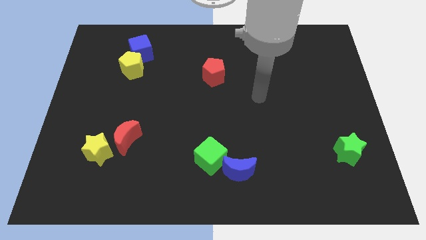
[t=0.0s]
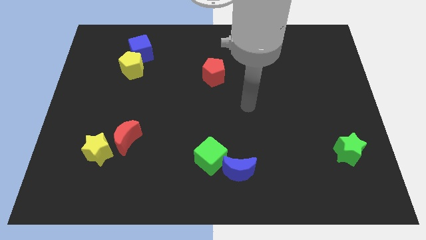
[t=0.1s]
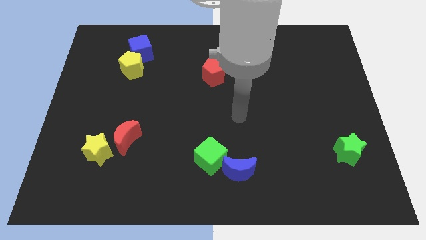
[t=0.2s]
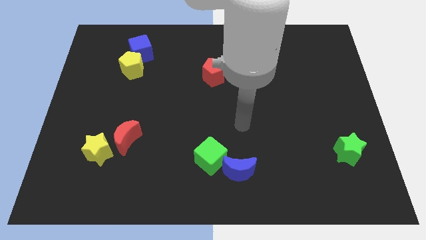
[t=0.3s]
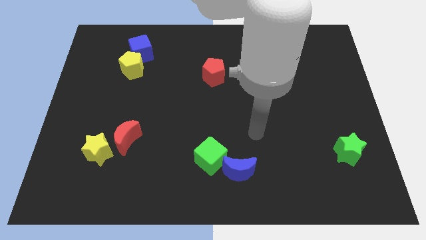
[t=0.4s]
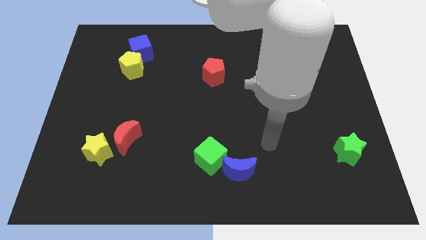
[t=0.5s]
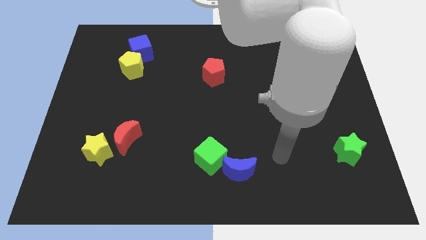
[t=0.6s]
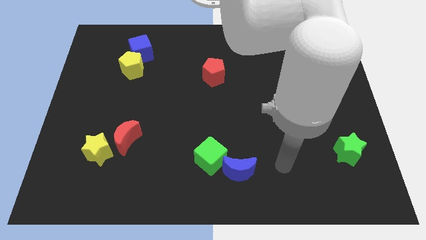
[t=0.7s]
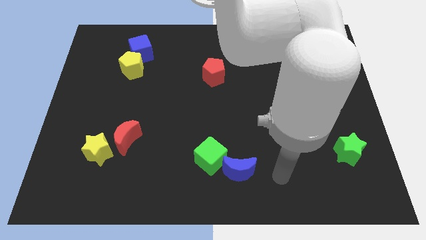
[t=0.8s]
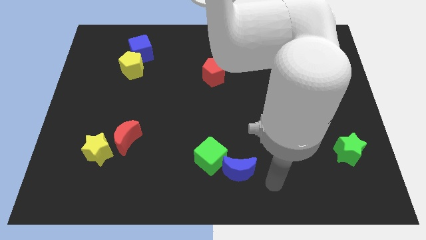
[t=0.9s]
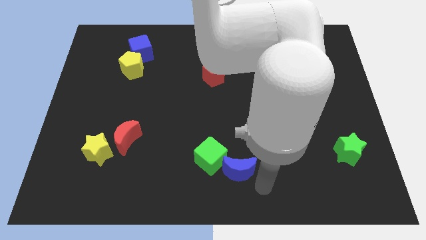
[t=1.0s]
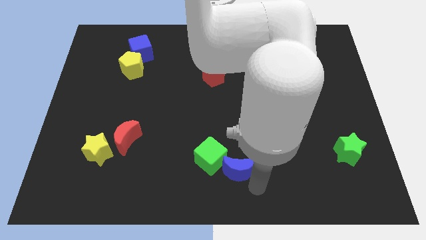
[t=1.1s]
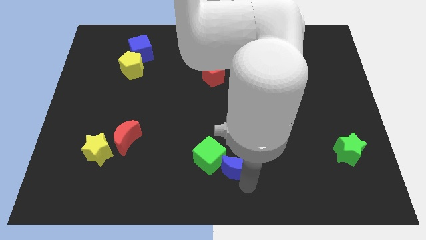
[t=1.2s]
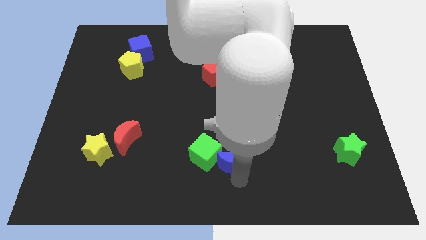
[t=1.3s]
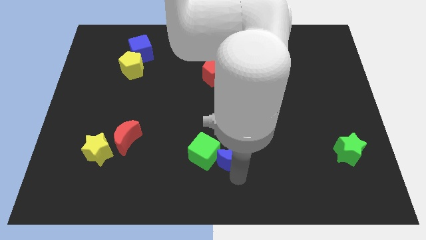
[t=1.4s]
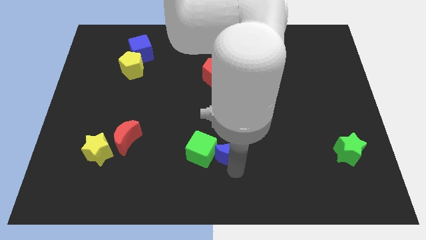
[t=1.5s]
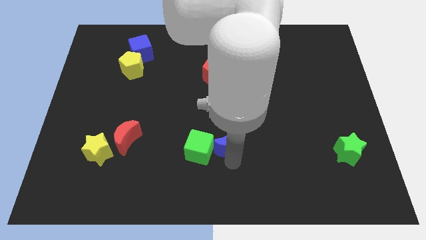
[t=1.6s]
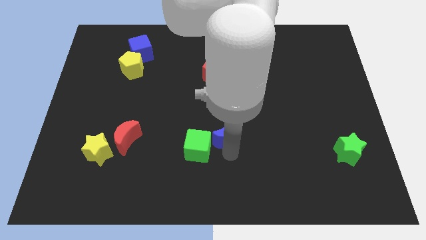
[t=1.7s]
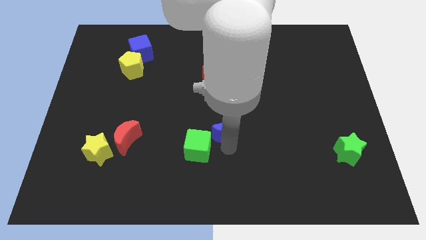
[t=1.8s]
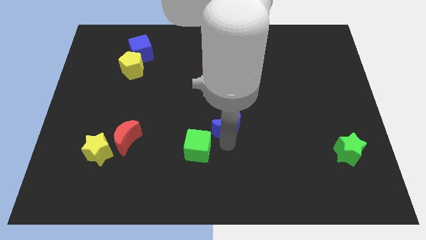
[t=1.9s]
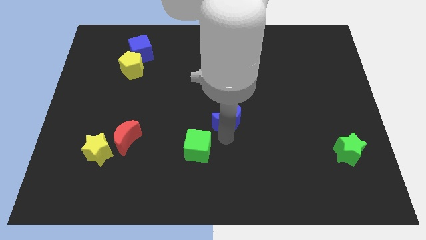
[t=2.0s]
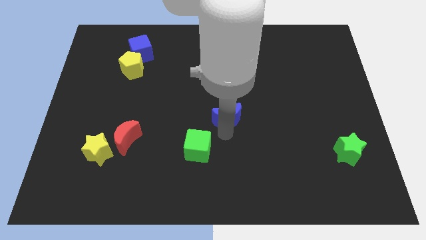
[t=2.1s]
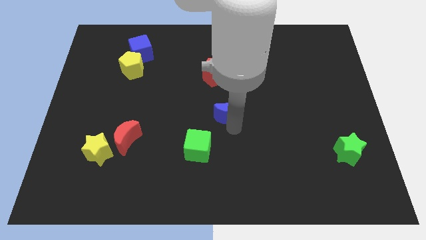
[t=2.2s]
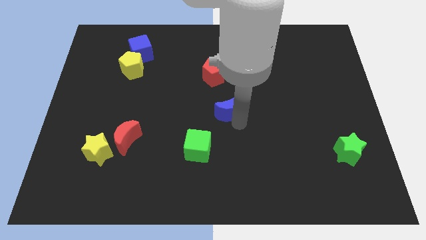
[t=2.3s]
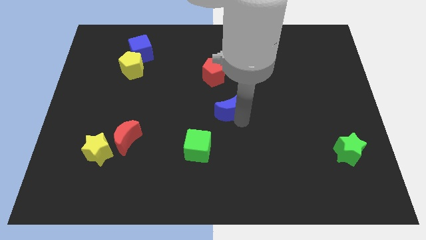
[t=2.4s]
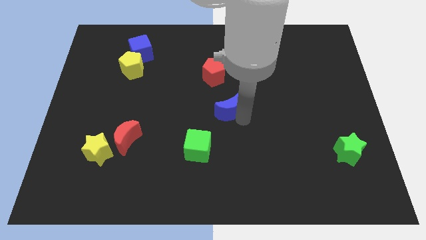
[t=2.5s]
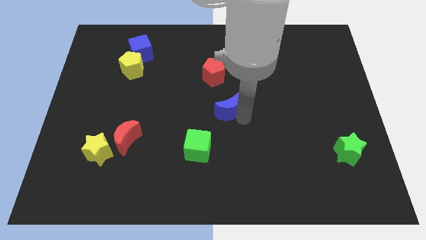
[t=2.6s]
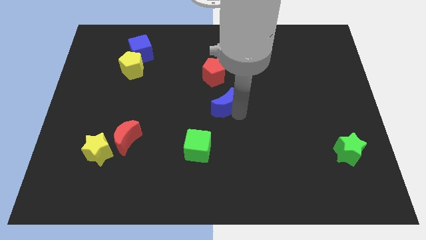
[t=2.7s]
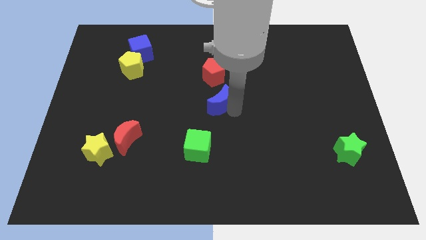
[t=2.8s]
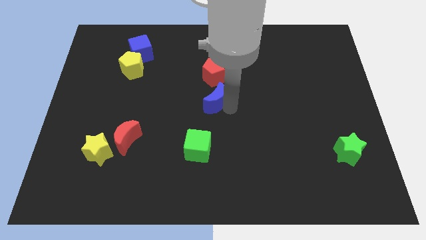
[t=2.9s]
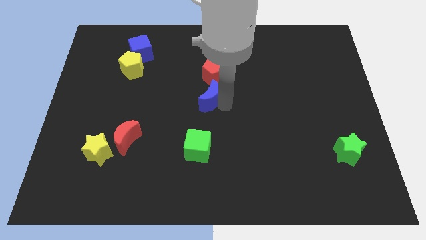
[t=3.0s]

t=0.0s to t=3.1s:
pus blue crescent below red pentagon

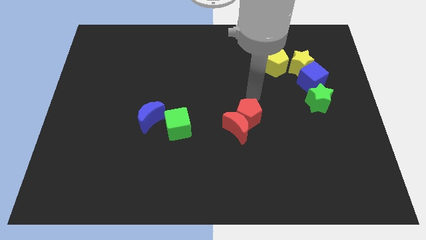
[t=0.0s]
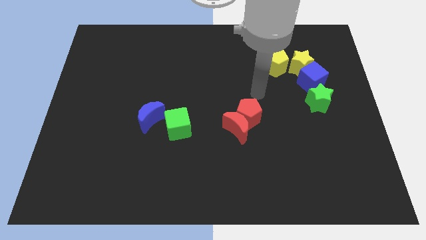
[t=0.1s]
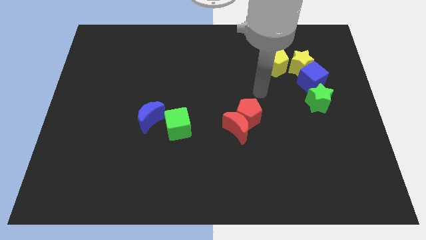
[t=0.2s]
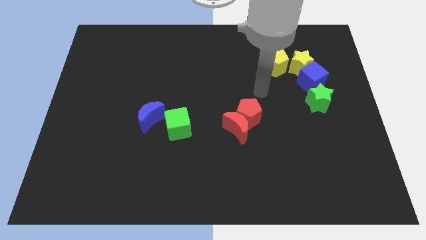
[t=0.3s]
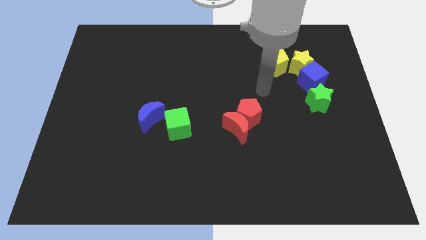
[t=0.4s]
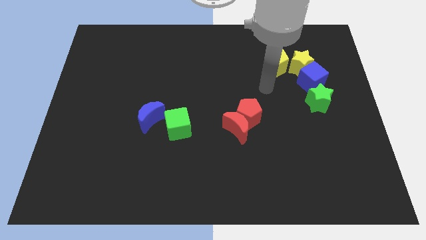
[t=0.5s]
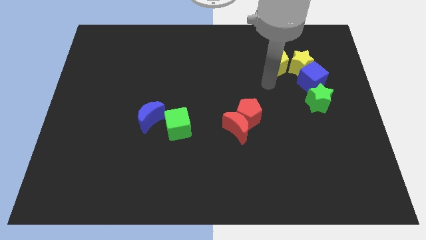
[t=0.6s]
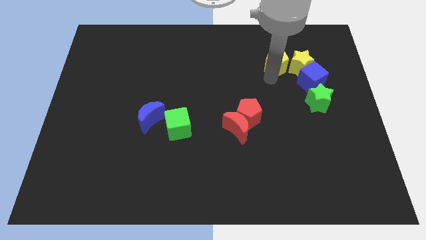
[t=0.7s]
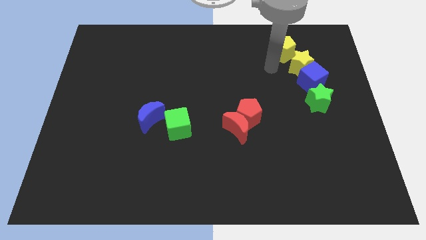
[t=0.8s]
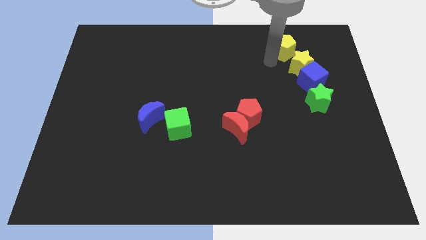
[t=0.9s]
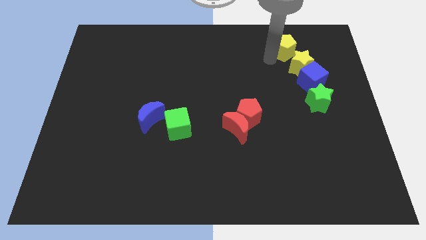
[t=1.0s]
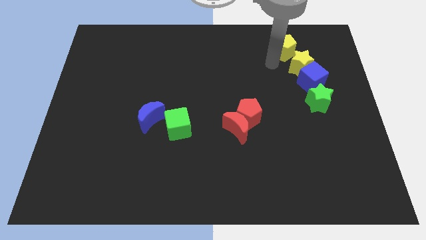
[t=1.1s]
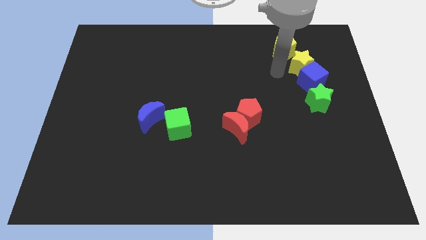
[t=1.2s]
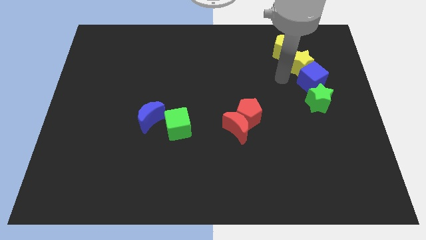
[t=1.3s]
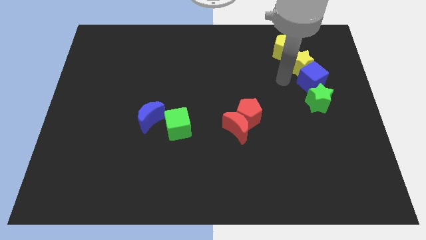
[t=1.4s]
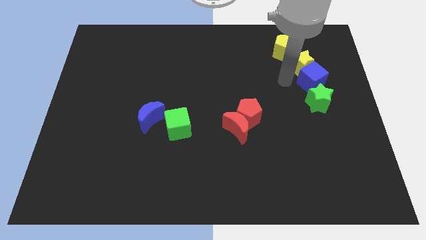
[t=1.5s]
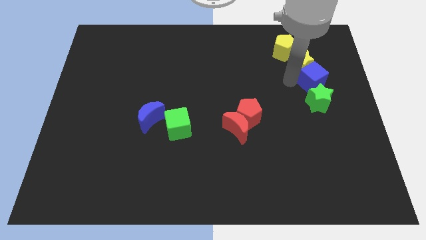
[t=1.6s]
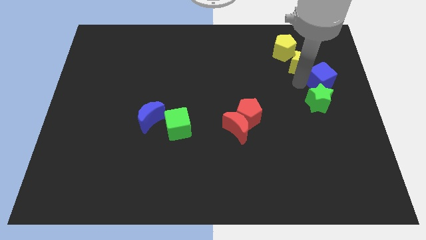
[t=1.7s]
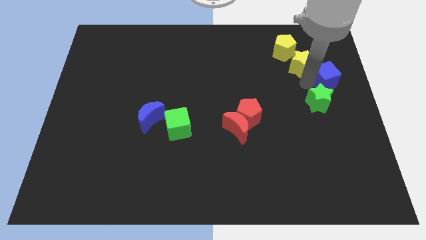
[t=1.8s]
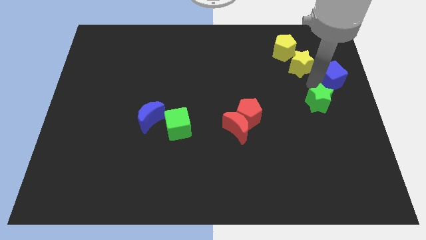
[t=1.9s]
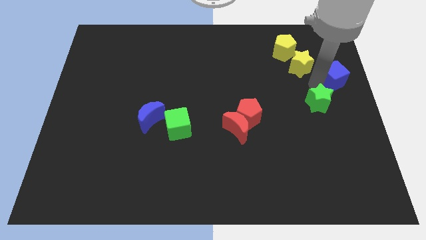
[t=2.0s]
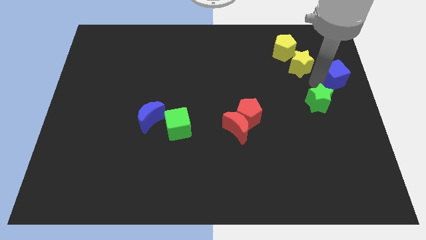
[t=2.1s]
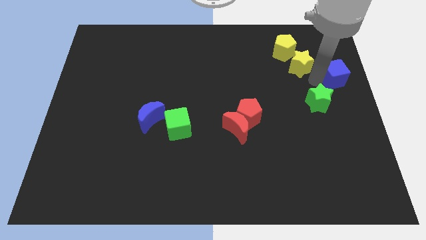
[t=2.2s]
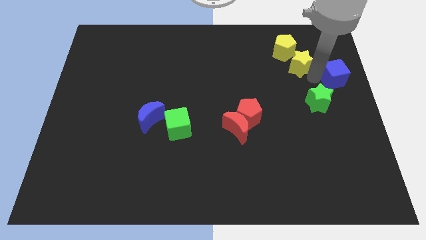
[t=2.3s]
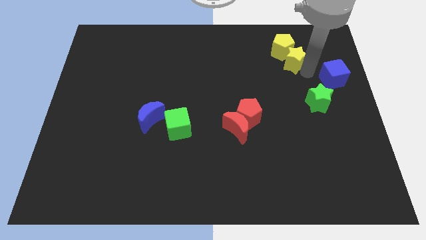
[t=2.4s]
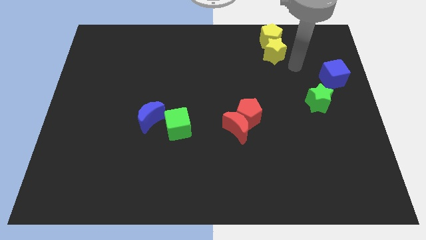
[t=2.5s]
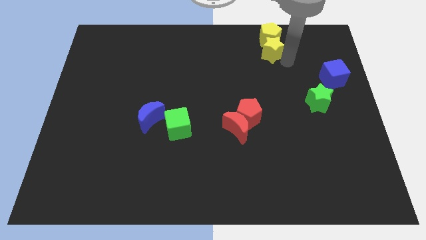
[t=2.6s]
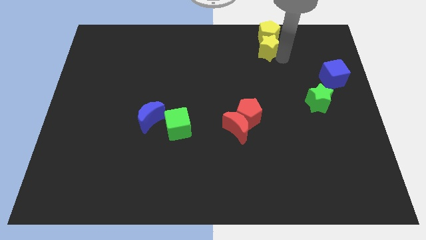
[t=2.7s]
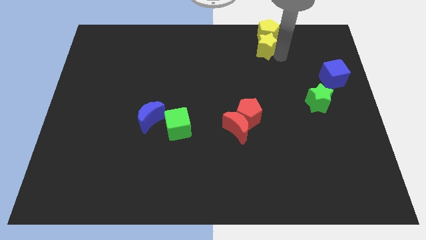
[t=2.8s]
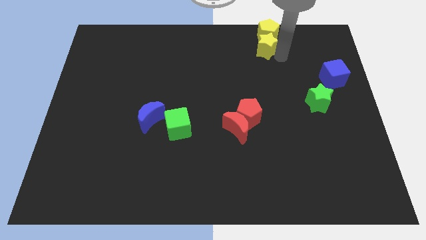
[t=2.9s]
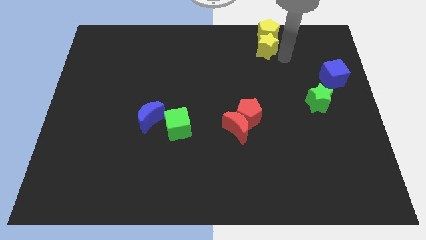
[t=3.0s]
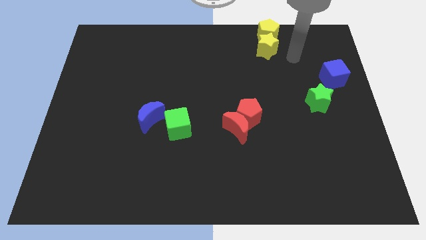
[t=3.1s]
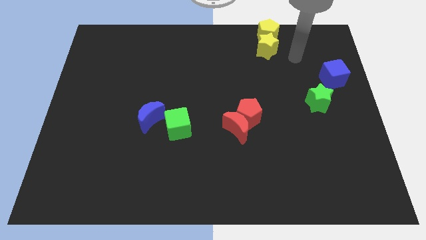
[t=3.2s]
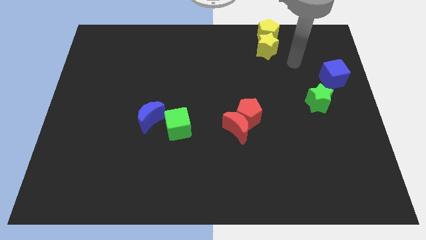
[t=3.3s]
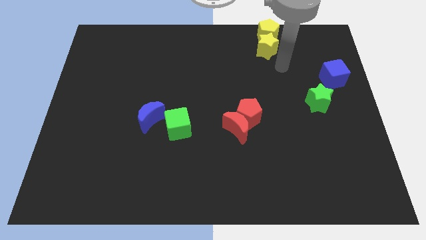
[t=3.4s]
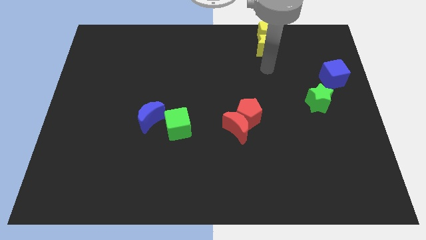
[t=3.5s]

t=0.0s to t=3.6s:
separate the blue cube and the yellow blocks

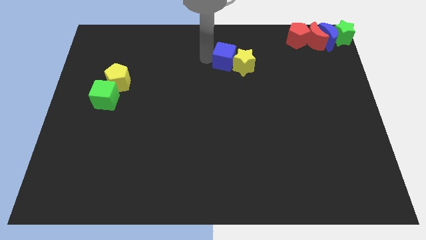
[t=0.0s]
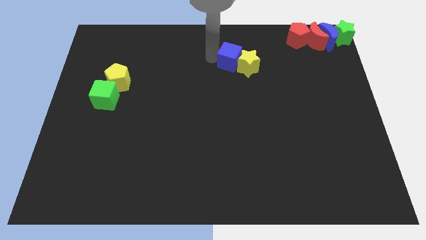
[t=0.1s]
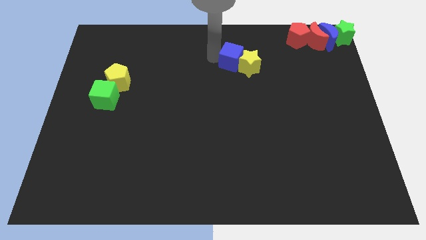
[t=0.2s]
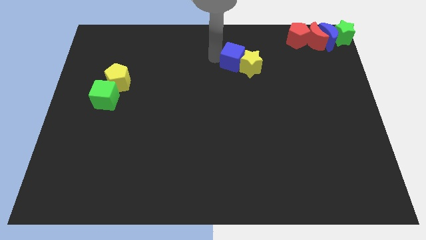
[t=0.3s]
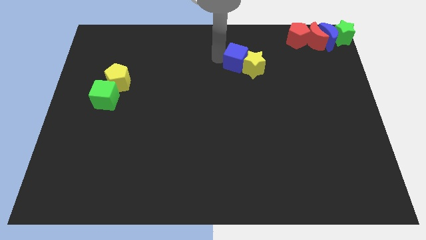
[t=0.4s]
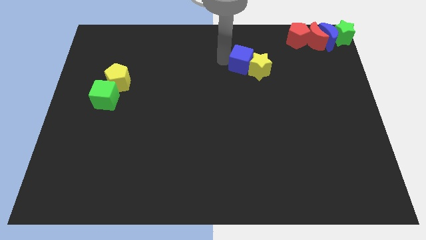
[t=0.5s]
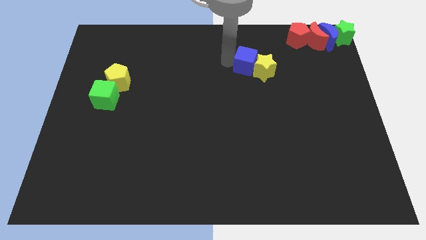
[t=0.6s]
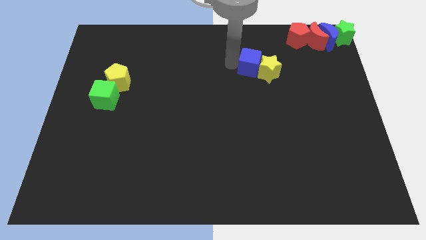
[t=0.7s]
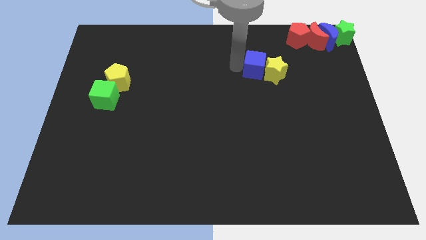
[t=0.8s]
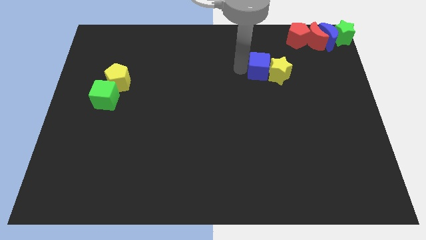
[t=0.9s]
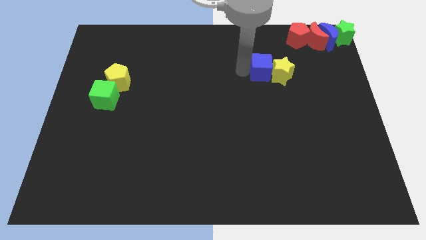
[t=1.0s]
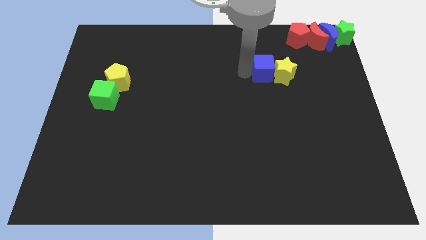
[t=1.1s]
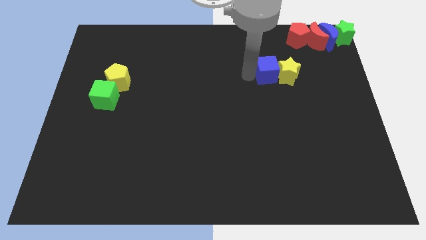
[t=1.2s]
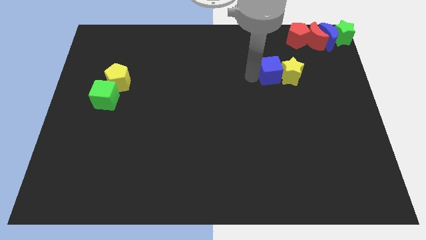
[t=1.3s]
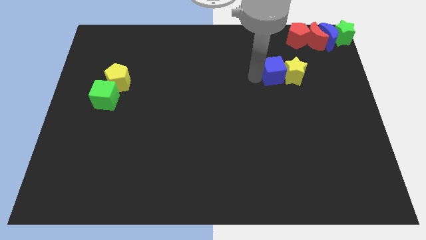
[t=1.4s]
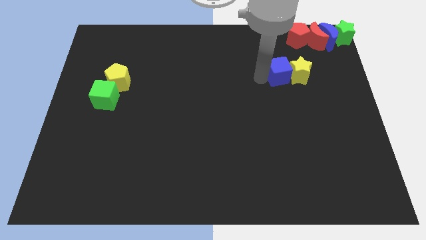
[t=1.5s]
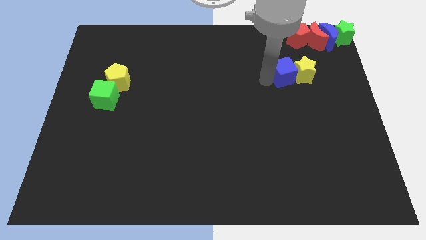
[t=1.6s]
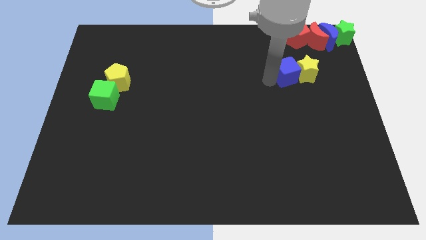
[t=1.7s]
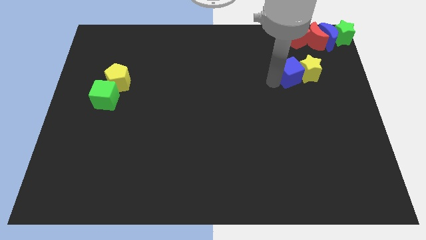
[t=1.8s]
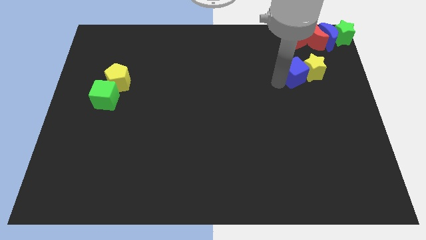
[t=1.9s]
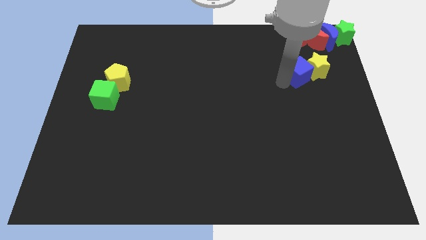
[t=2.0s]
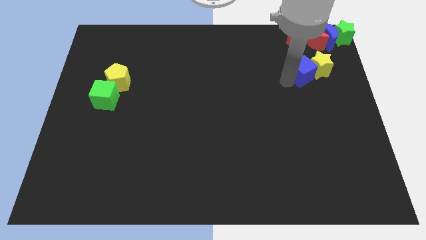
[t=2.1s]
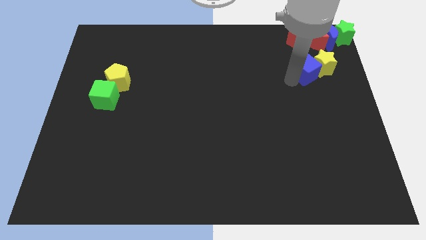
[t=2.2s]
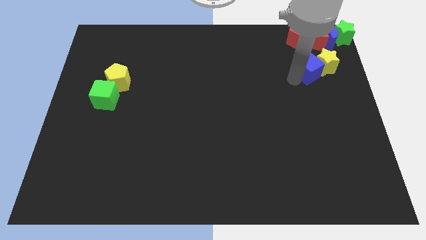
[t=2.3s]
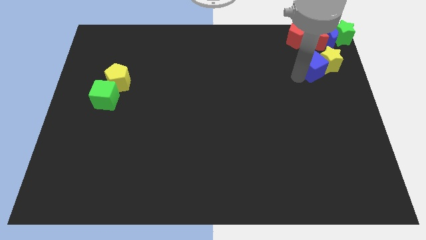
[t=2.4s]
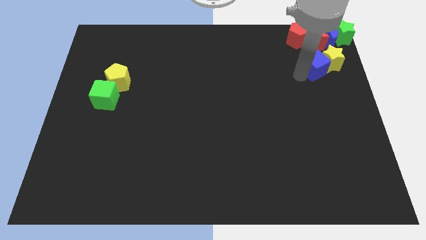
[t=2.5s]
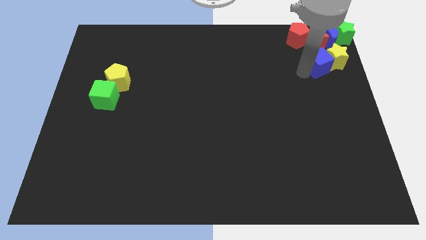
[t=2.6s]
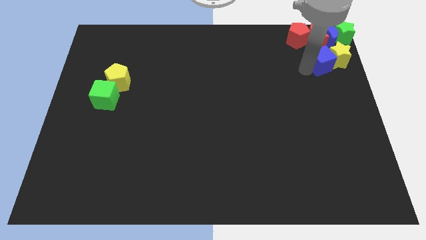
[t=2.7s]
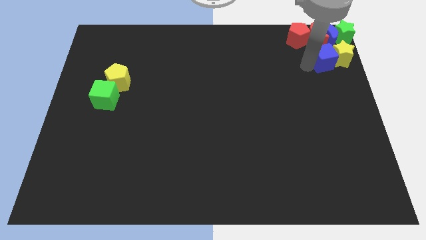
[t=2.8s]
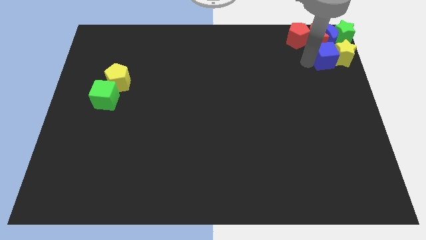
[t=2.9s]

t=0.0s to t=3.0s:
move blue cube along with yellow star to the bottom of group of objects
